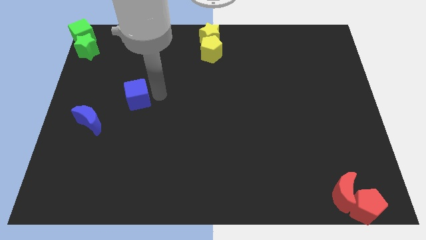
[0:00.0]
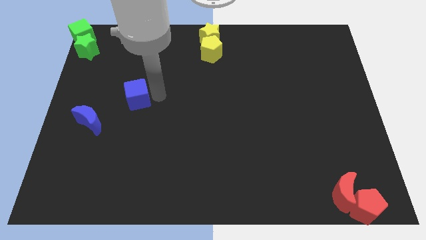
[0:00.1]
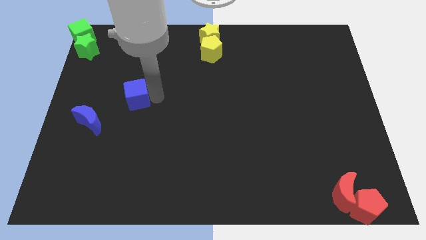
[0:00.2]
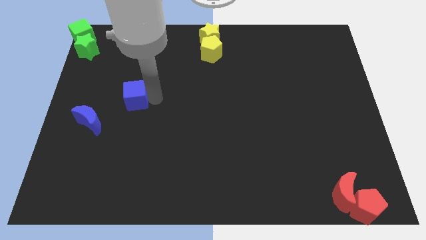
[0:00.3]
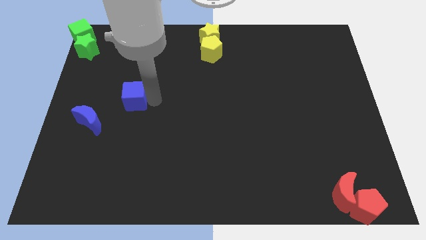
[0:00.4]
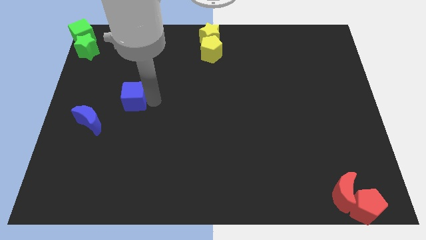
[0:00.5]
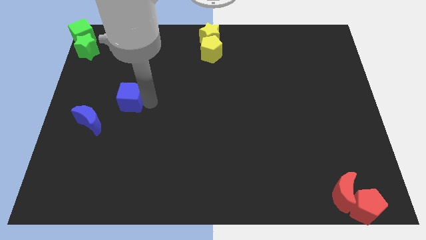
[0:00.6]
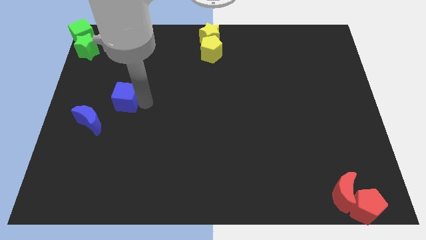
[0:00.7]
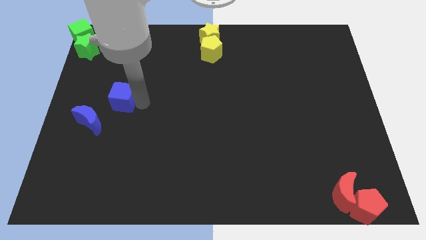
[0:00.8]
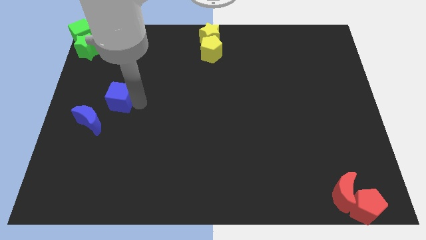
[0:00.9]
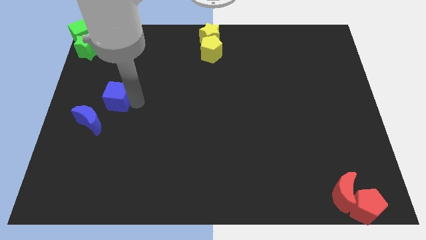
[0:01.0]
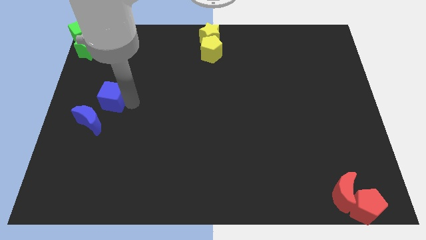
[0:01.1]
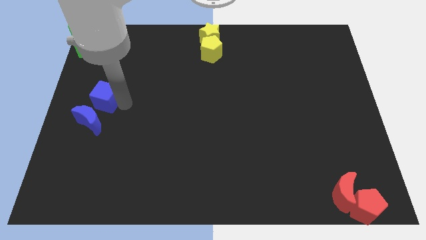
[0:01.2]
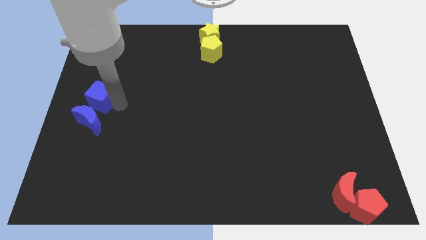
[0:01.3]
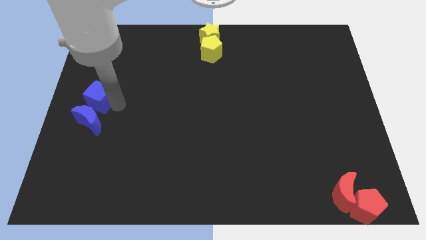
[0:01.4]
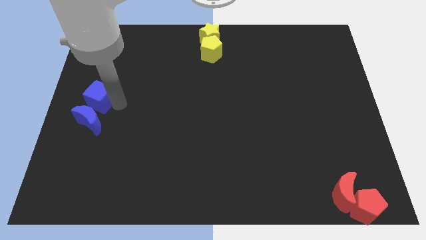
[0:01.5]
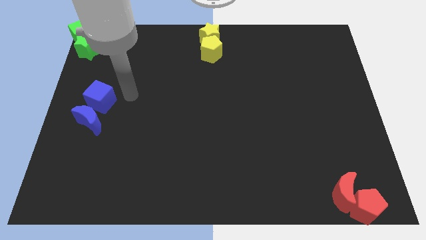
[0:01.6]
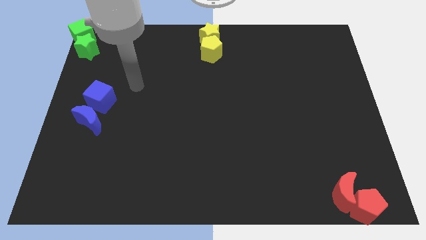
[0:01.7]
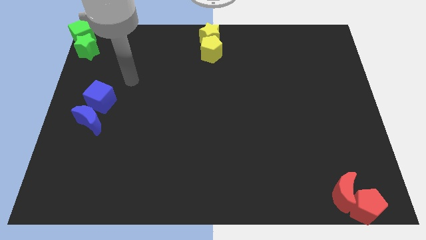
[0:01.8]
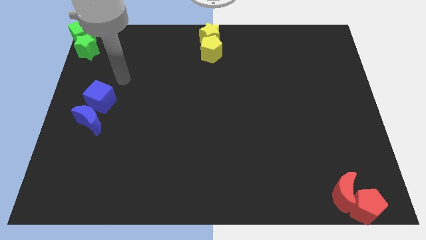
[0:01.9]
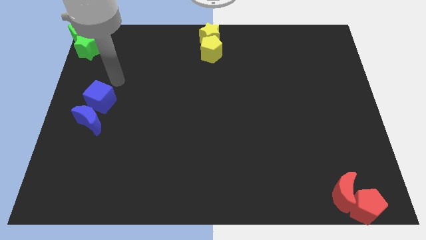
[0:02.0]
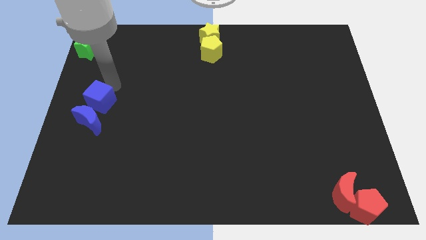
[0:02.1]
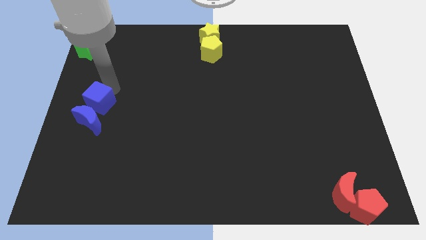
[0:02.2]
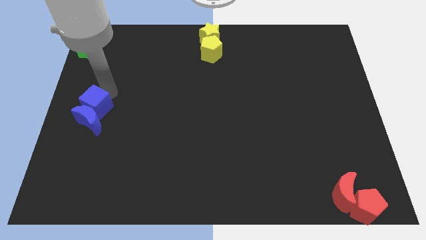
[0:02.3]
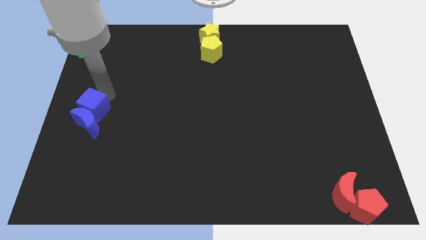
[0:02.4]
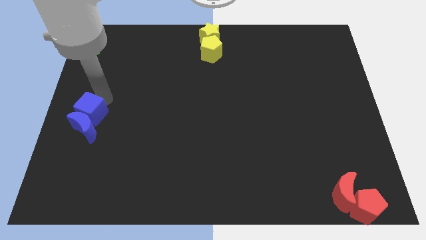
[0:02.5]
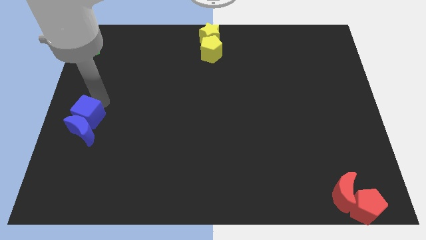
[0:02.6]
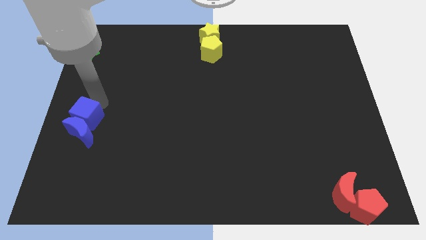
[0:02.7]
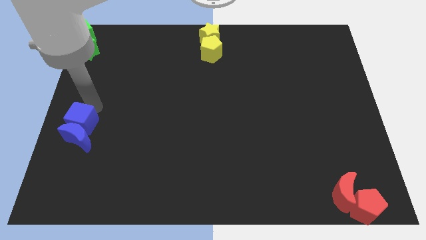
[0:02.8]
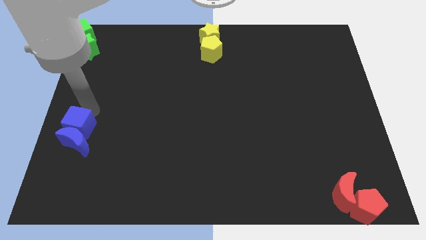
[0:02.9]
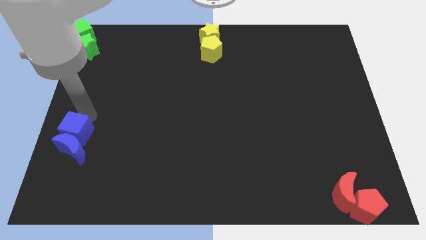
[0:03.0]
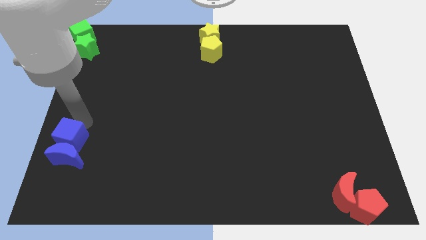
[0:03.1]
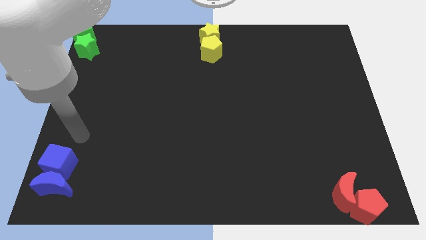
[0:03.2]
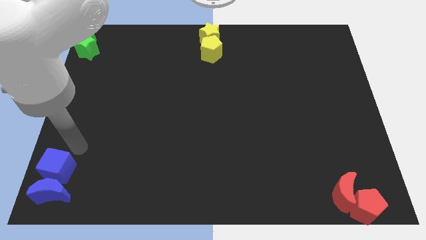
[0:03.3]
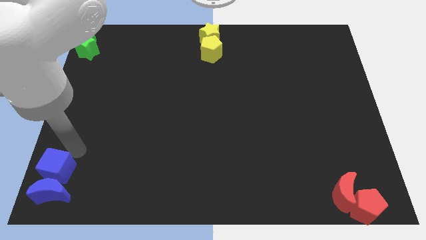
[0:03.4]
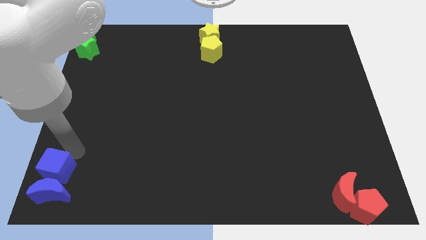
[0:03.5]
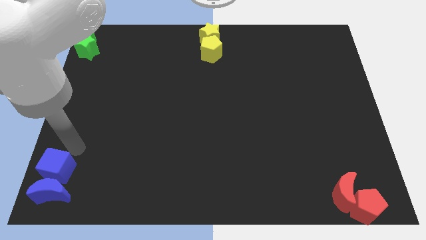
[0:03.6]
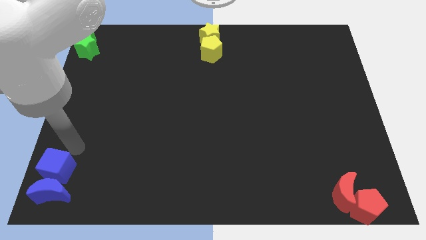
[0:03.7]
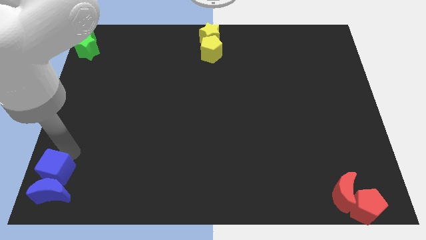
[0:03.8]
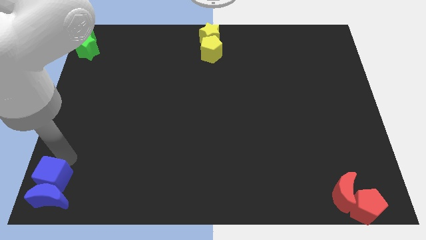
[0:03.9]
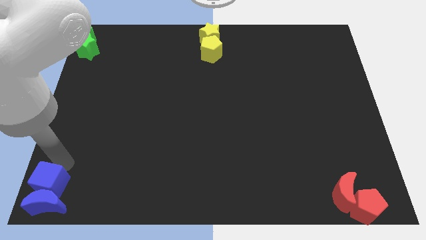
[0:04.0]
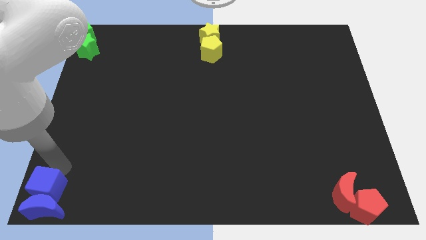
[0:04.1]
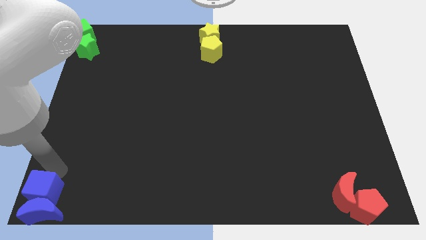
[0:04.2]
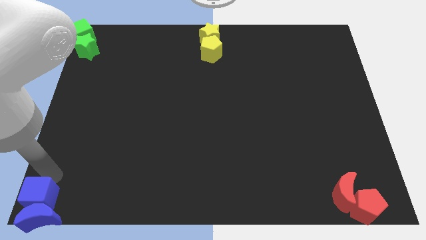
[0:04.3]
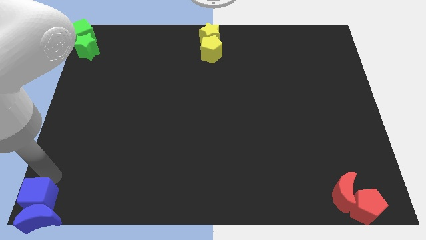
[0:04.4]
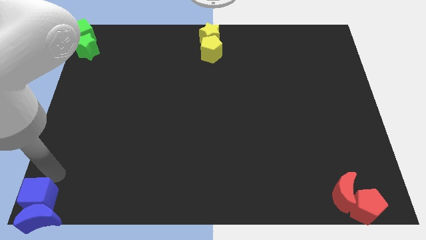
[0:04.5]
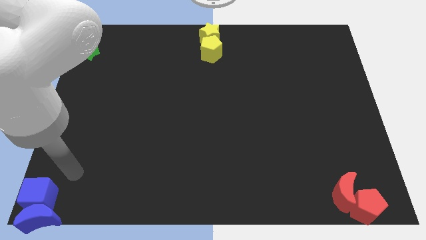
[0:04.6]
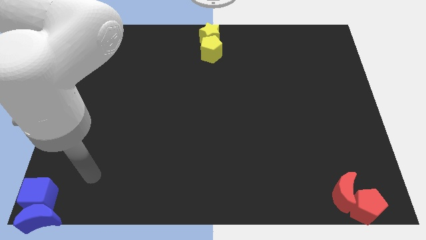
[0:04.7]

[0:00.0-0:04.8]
push the blue cube with blue crescent to the bottom left corner of the board

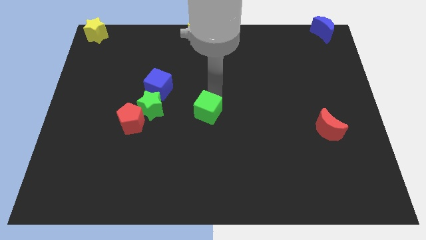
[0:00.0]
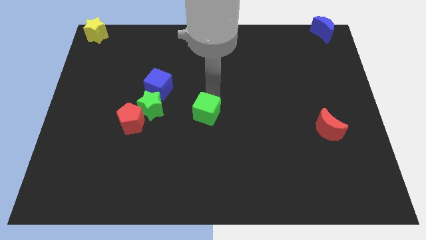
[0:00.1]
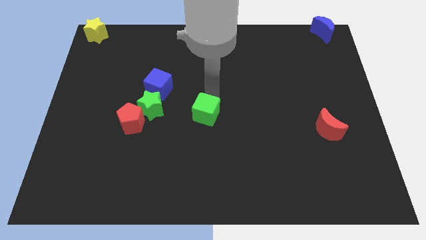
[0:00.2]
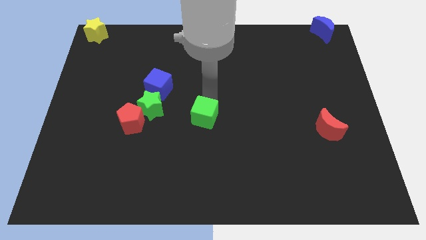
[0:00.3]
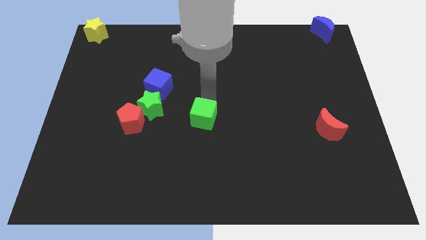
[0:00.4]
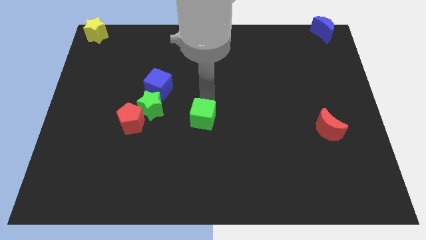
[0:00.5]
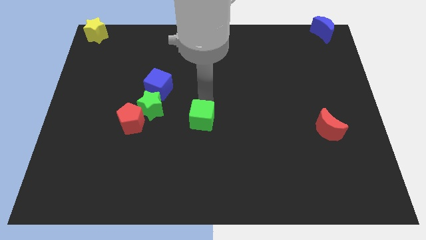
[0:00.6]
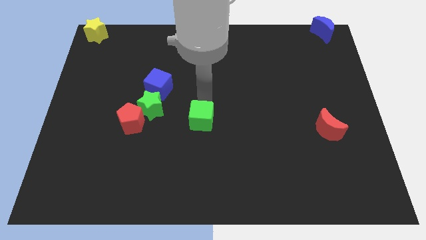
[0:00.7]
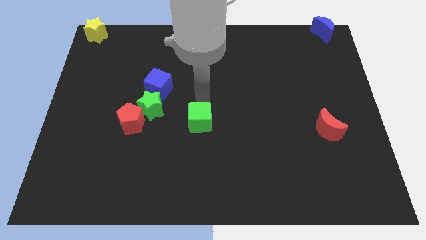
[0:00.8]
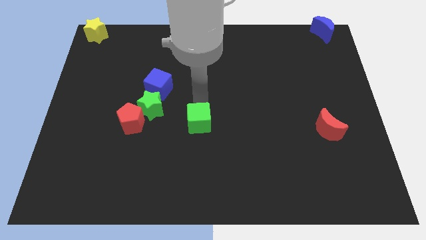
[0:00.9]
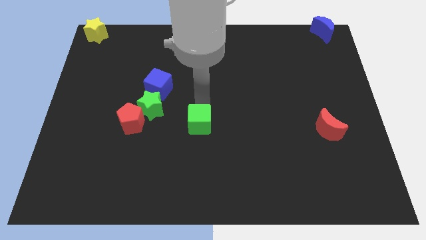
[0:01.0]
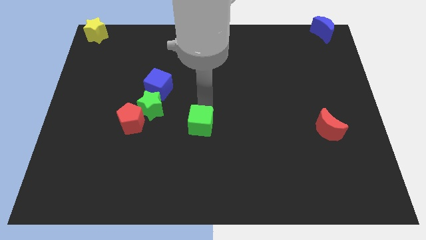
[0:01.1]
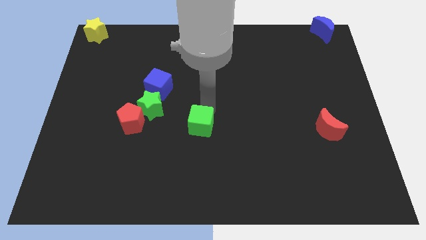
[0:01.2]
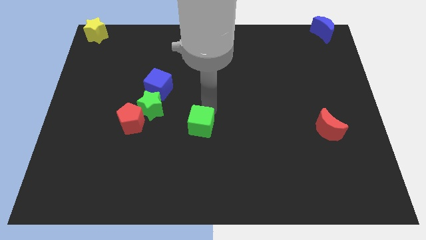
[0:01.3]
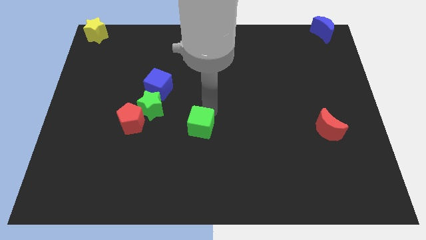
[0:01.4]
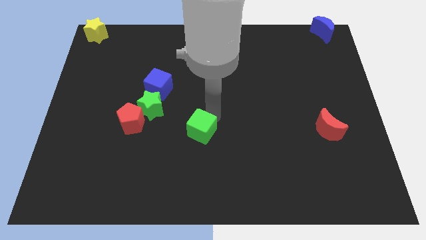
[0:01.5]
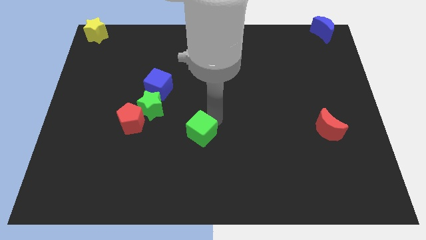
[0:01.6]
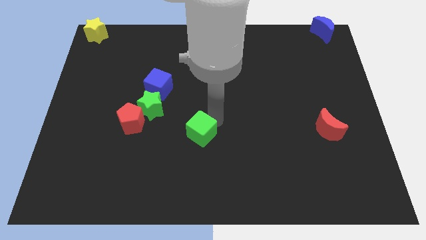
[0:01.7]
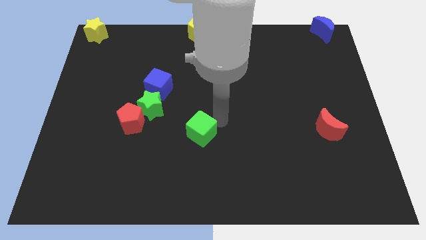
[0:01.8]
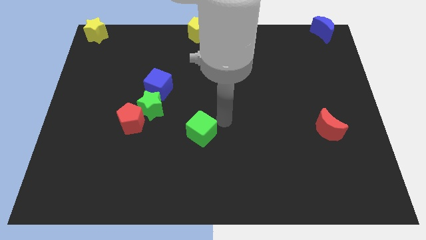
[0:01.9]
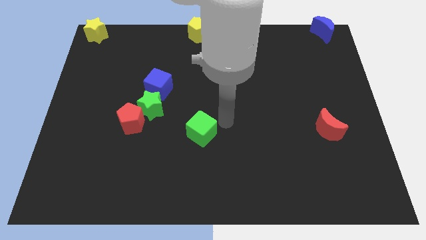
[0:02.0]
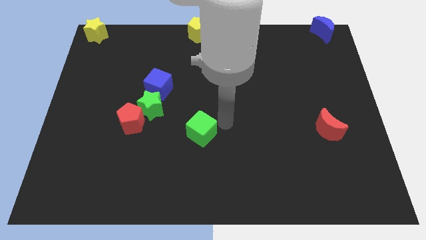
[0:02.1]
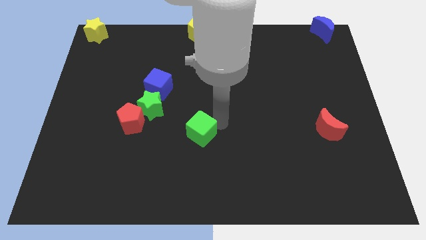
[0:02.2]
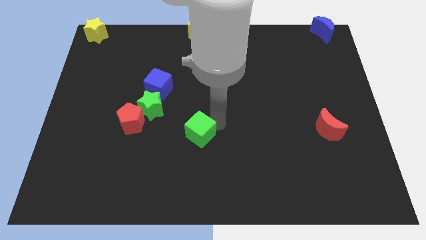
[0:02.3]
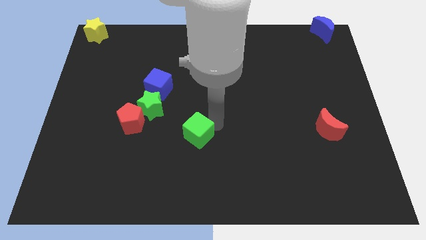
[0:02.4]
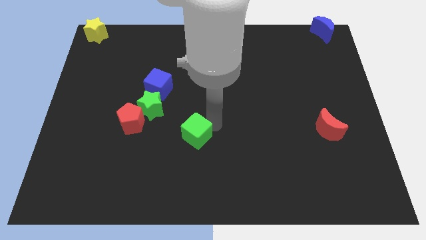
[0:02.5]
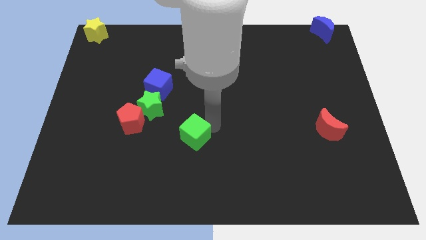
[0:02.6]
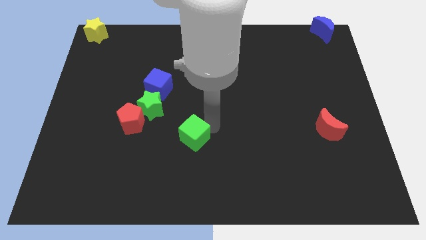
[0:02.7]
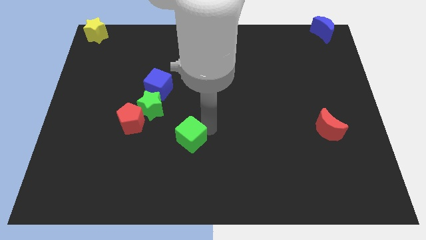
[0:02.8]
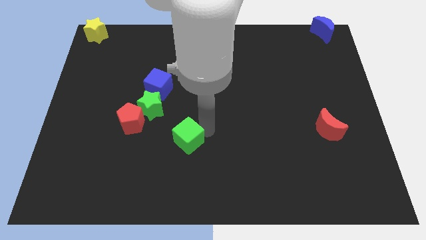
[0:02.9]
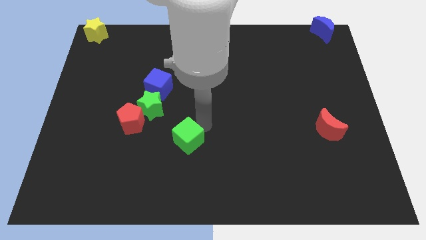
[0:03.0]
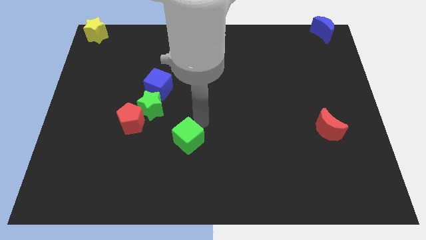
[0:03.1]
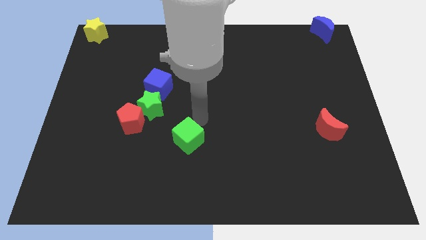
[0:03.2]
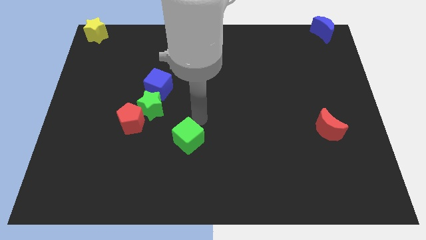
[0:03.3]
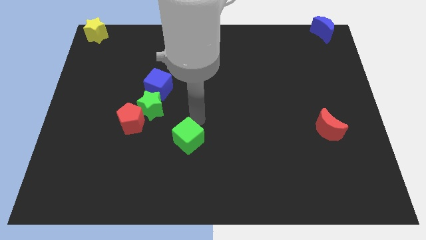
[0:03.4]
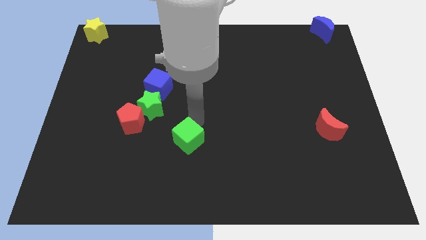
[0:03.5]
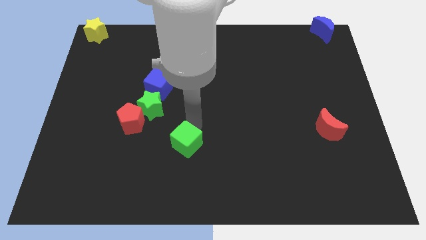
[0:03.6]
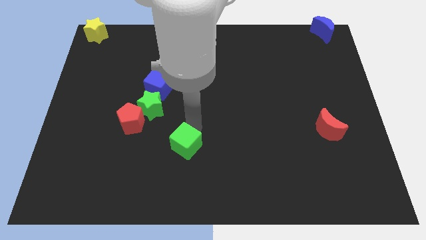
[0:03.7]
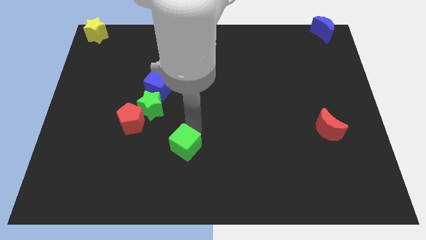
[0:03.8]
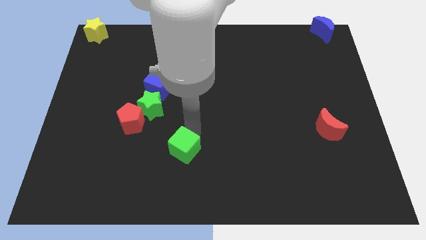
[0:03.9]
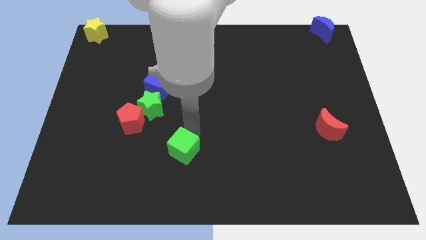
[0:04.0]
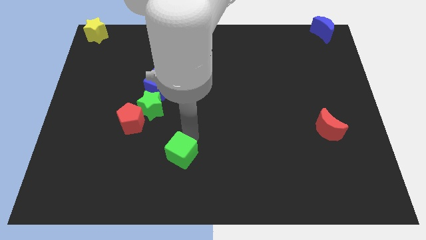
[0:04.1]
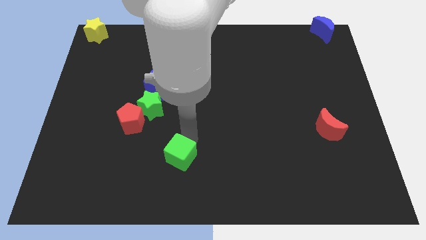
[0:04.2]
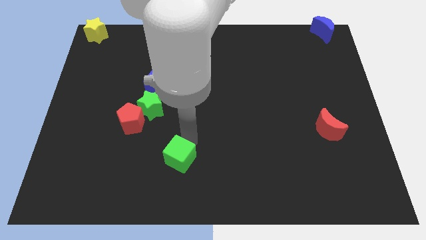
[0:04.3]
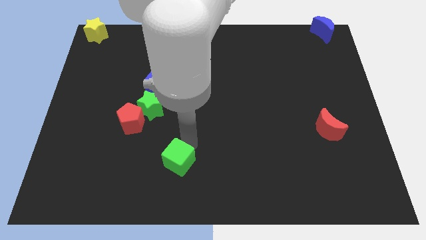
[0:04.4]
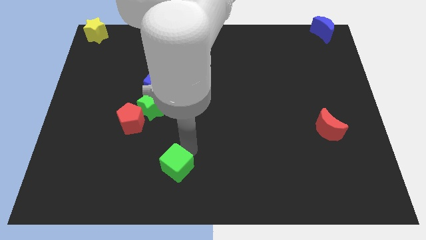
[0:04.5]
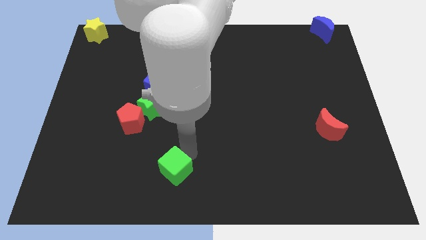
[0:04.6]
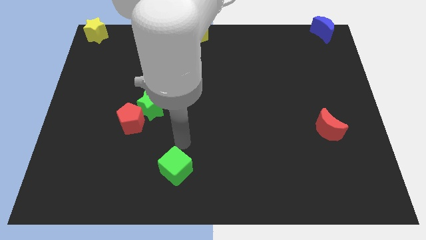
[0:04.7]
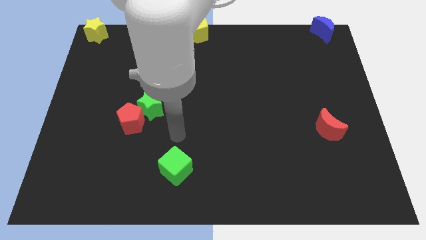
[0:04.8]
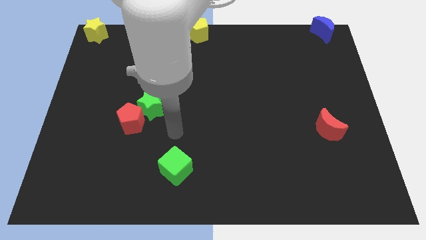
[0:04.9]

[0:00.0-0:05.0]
move the green cube towards the bottom center of the board
